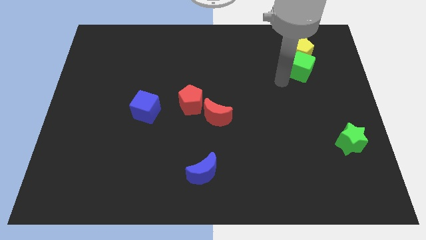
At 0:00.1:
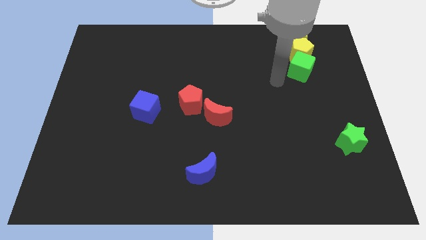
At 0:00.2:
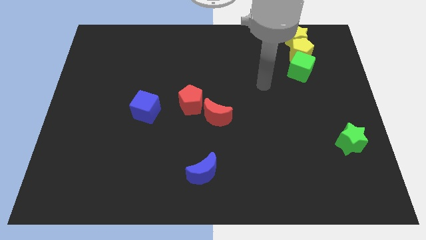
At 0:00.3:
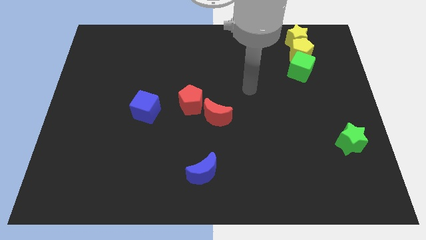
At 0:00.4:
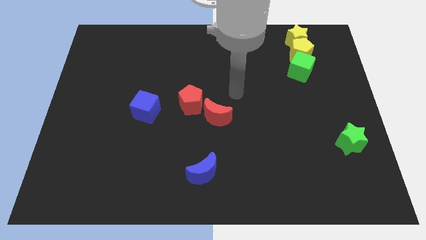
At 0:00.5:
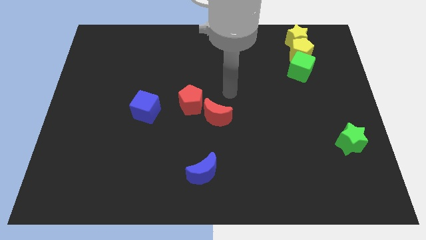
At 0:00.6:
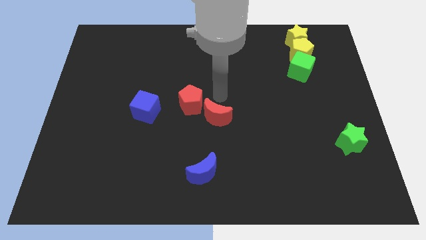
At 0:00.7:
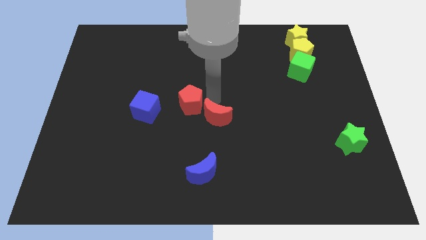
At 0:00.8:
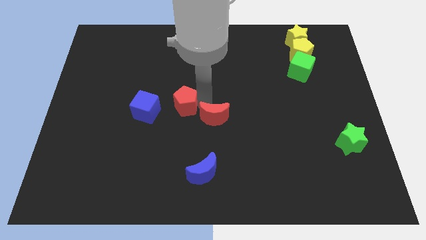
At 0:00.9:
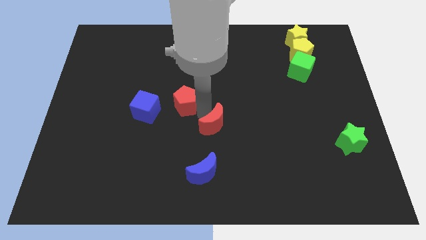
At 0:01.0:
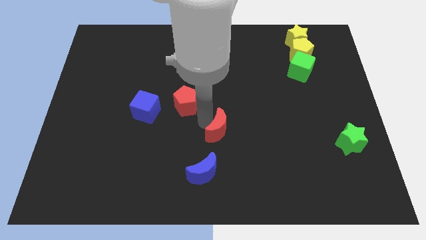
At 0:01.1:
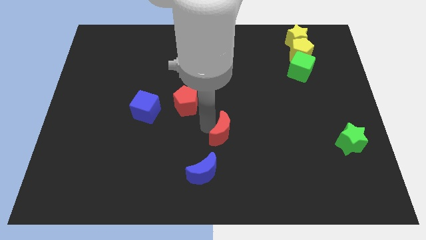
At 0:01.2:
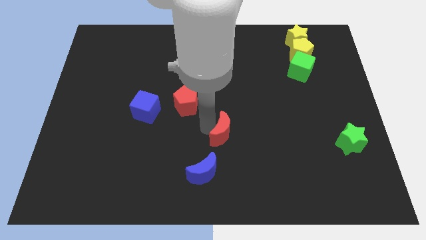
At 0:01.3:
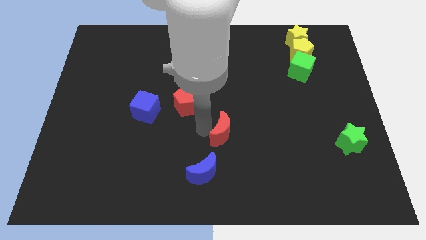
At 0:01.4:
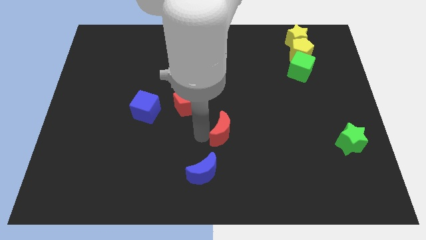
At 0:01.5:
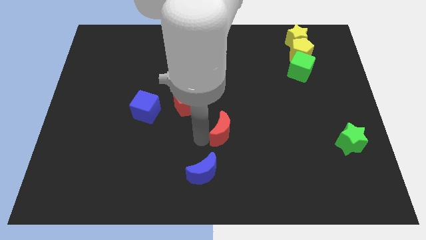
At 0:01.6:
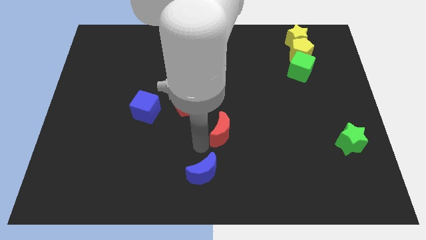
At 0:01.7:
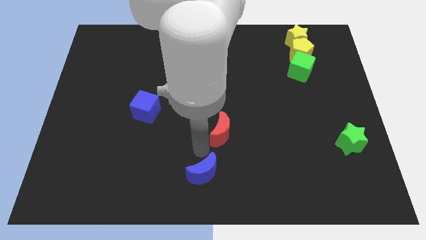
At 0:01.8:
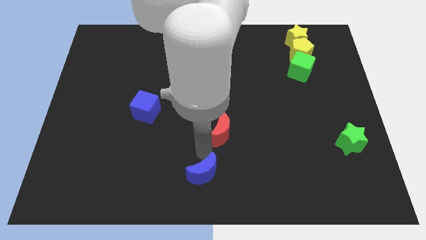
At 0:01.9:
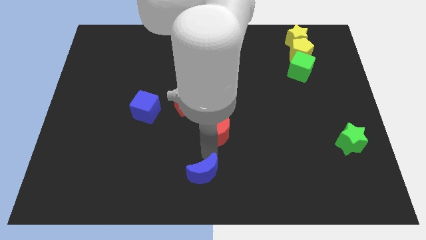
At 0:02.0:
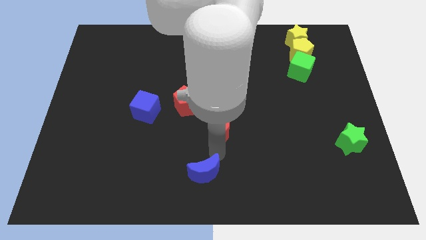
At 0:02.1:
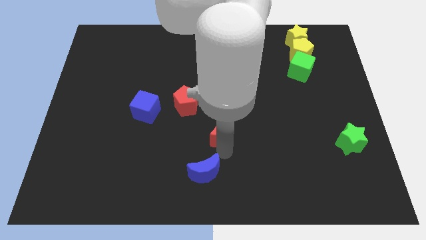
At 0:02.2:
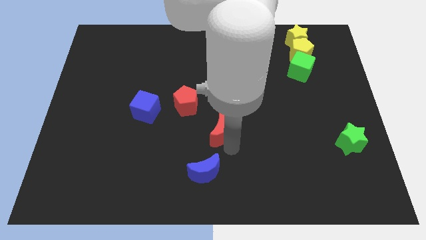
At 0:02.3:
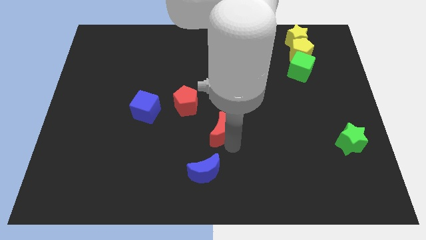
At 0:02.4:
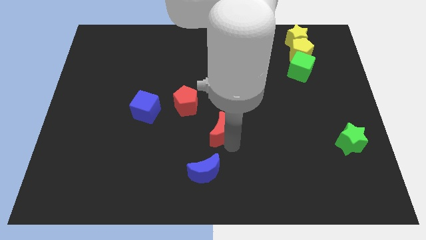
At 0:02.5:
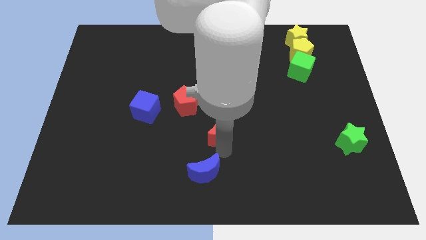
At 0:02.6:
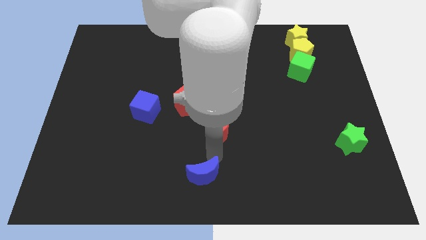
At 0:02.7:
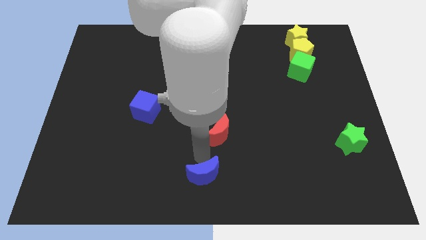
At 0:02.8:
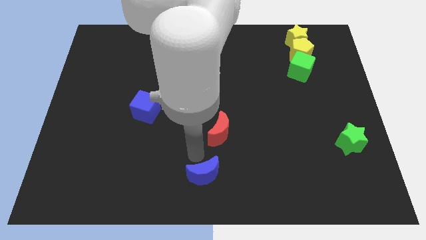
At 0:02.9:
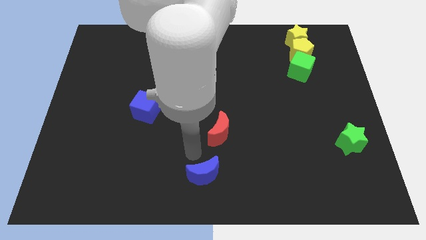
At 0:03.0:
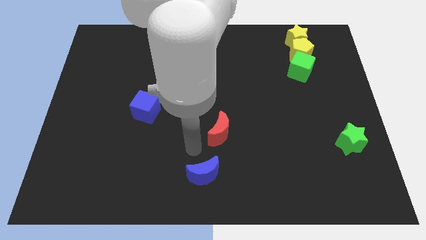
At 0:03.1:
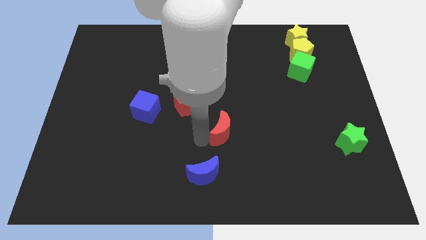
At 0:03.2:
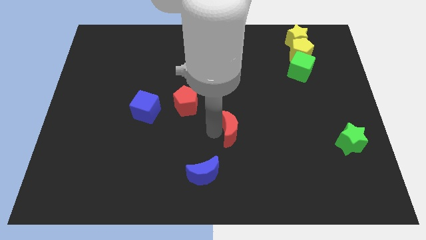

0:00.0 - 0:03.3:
slide the red moon diagonally bottom right to the red pentagon

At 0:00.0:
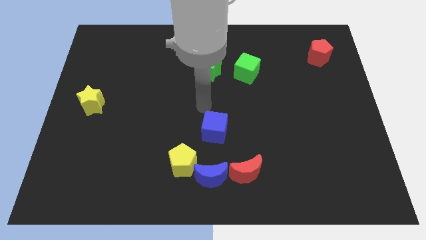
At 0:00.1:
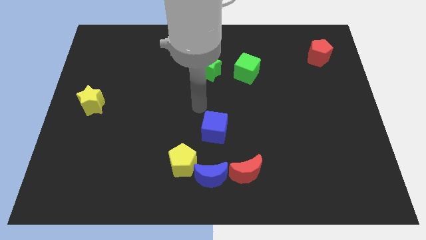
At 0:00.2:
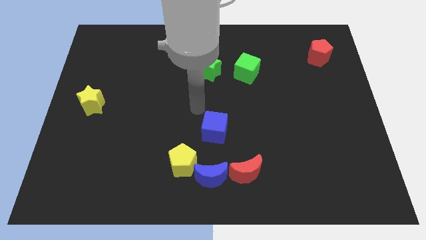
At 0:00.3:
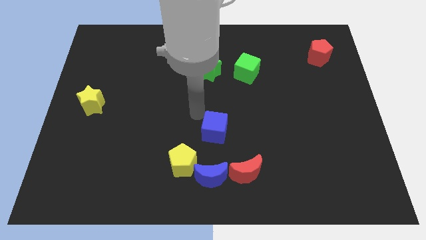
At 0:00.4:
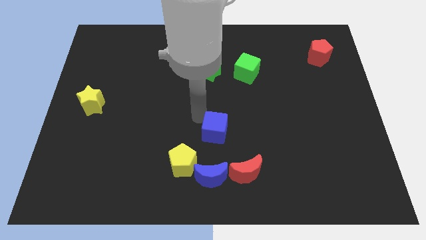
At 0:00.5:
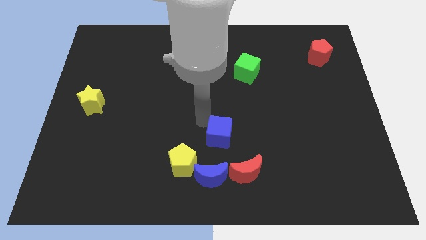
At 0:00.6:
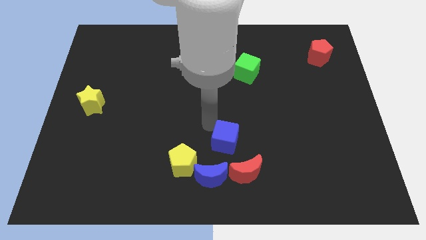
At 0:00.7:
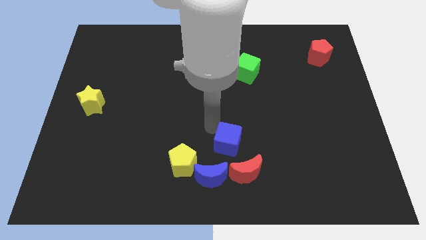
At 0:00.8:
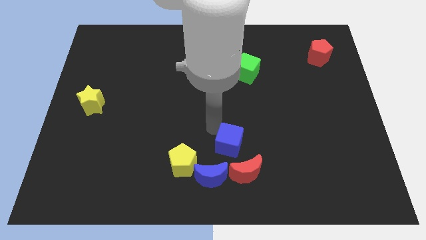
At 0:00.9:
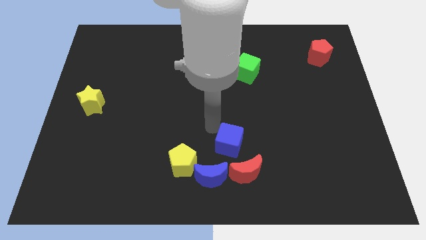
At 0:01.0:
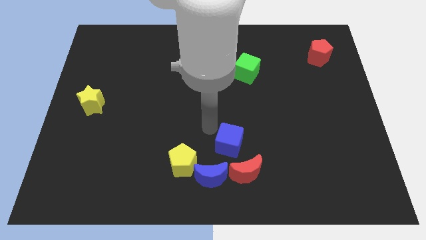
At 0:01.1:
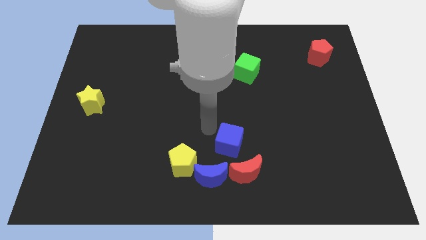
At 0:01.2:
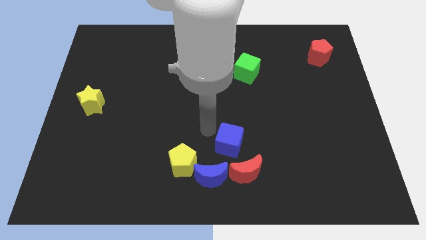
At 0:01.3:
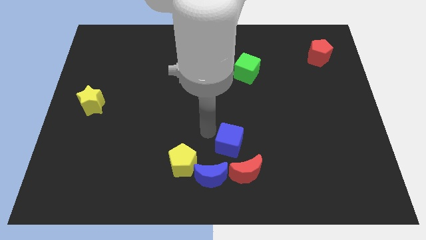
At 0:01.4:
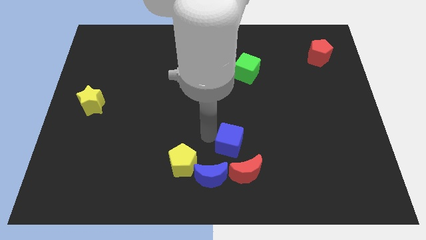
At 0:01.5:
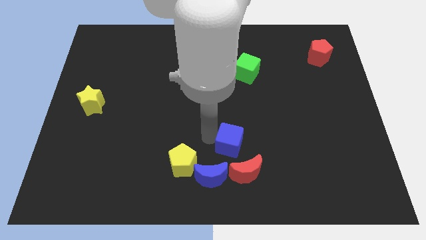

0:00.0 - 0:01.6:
place the blue cube above the red moon

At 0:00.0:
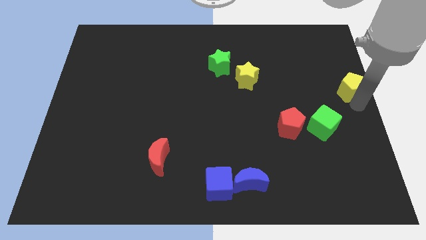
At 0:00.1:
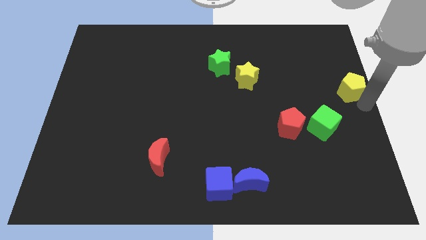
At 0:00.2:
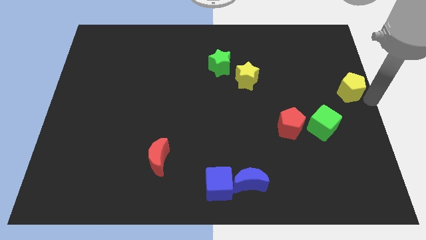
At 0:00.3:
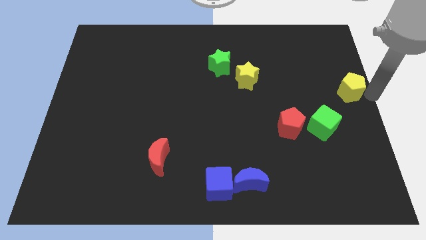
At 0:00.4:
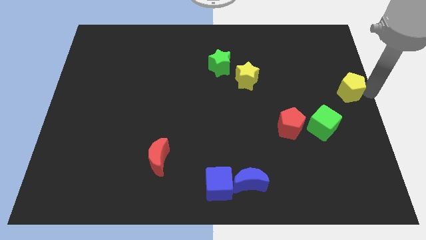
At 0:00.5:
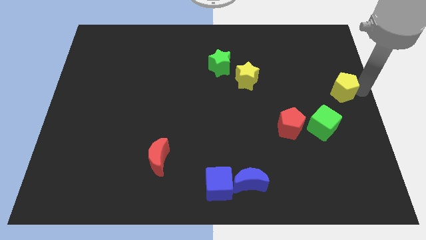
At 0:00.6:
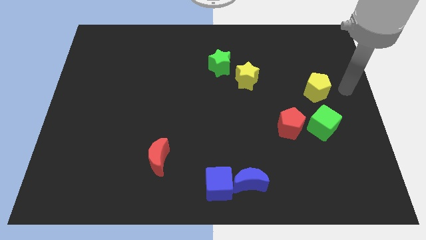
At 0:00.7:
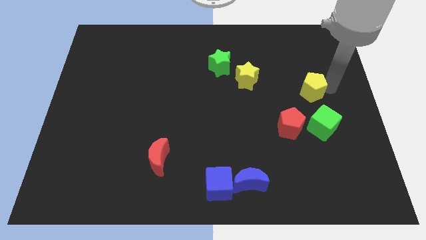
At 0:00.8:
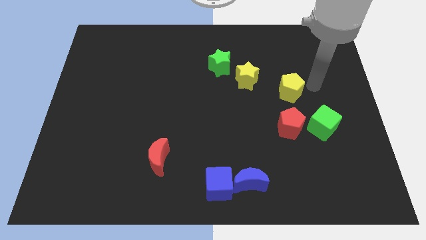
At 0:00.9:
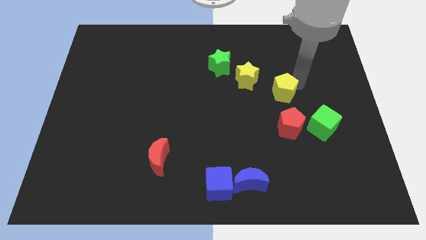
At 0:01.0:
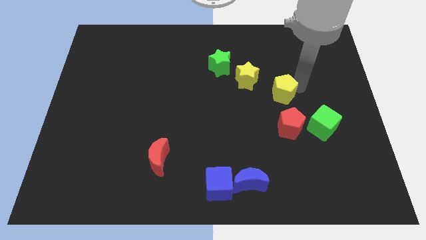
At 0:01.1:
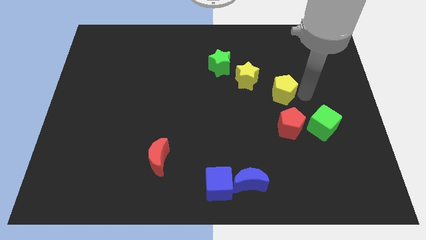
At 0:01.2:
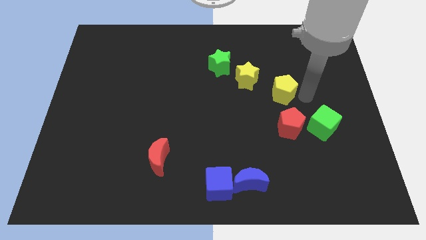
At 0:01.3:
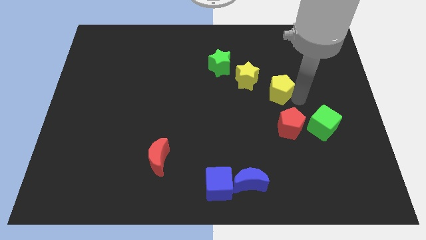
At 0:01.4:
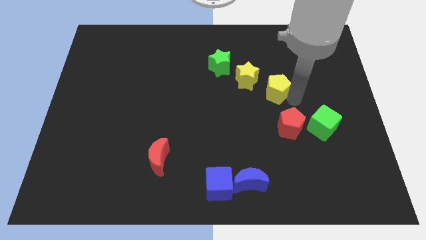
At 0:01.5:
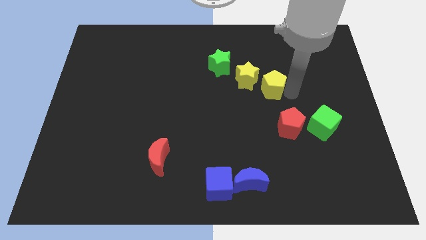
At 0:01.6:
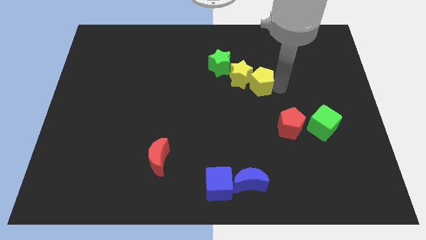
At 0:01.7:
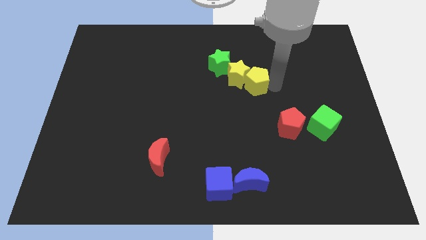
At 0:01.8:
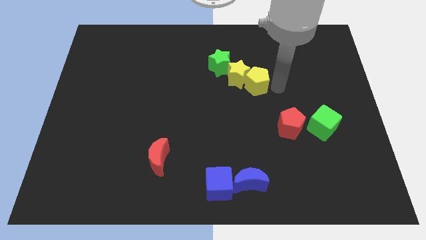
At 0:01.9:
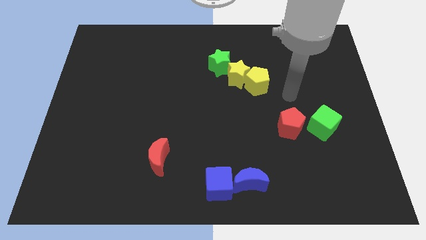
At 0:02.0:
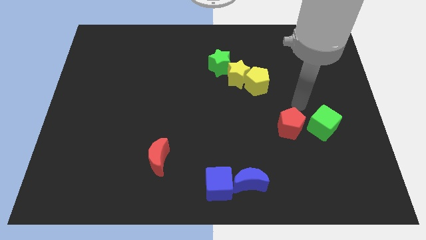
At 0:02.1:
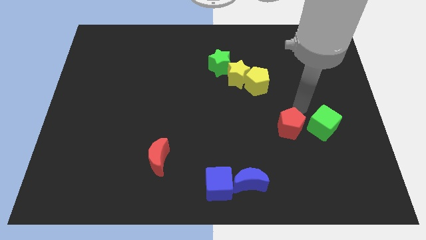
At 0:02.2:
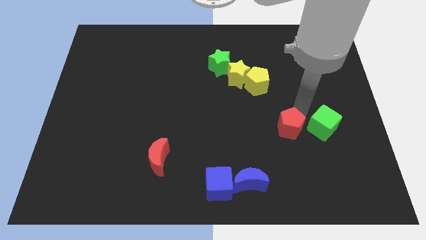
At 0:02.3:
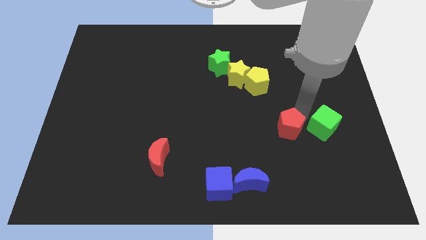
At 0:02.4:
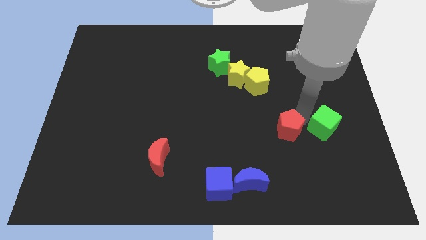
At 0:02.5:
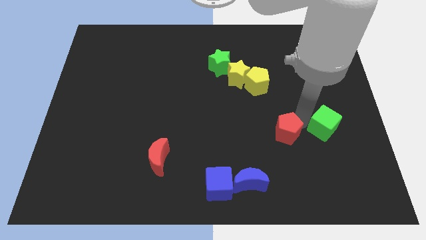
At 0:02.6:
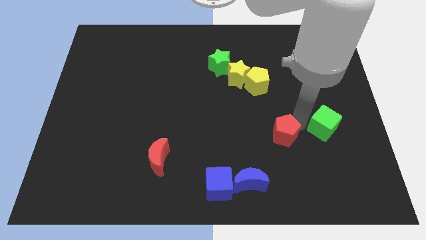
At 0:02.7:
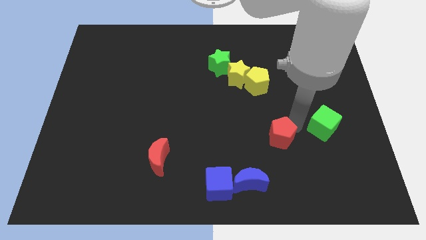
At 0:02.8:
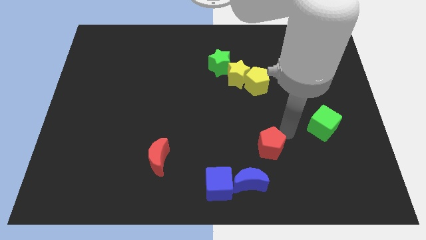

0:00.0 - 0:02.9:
push the yellow pentagon close to the yellow star

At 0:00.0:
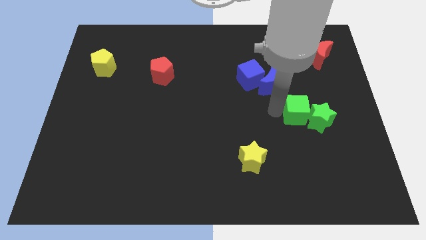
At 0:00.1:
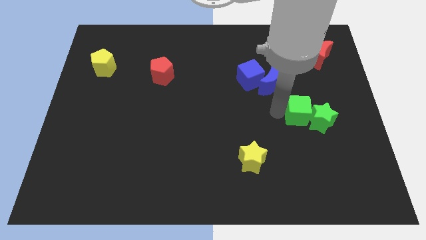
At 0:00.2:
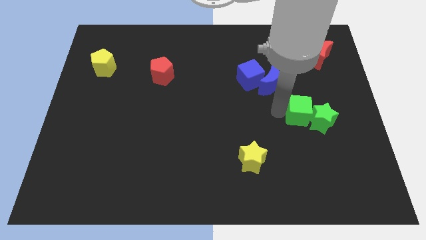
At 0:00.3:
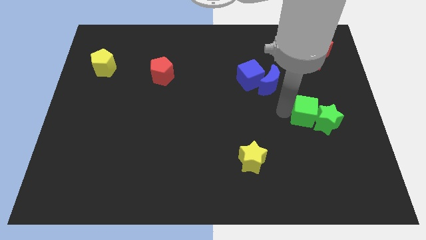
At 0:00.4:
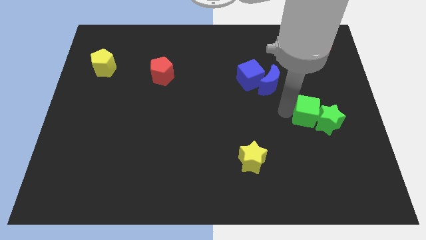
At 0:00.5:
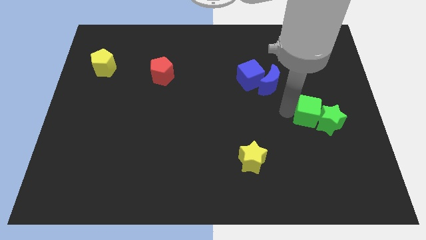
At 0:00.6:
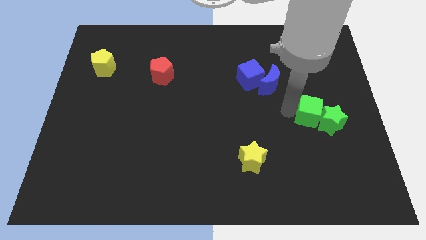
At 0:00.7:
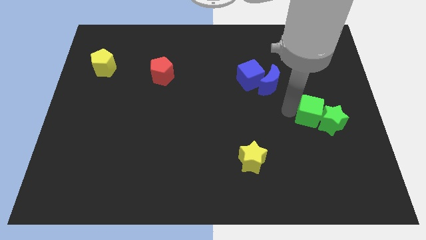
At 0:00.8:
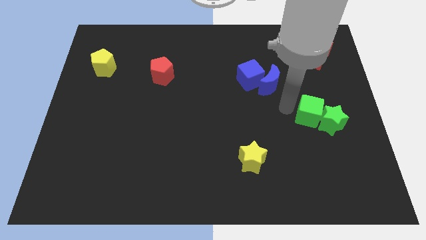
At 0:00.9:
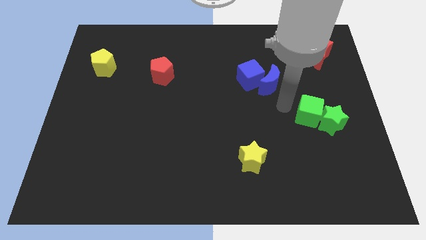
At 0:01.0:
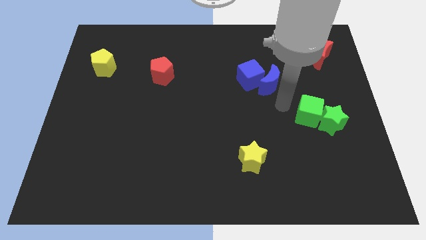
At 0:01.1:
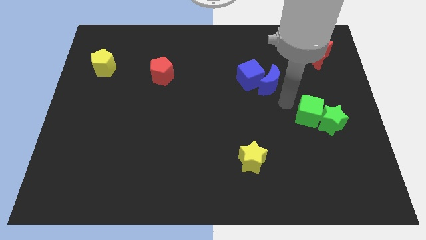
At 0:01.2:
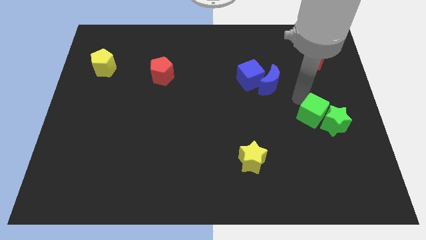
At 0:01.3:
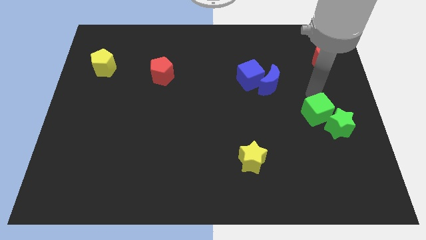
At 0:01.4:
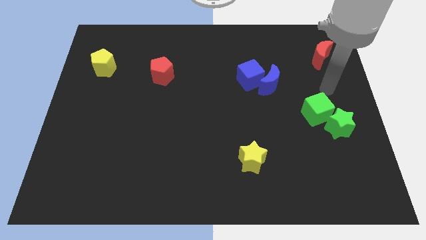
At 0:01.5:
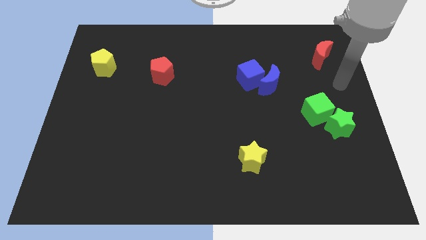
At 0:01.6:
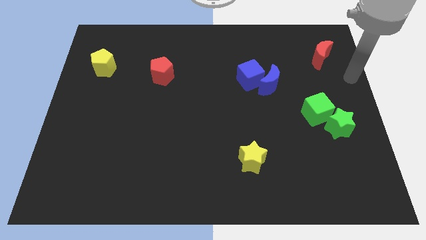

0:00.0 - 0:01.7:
push the green cube along with the green star slightly to the right
